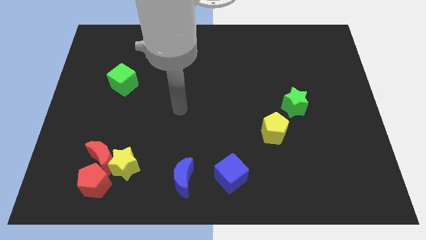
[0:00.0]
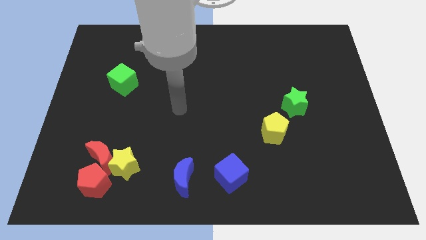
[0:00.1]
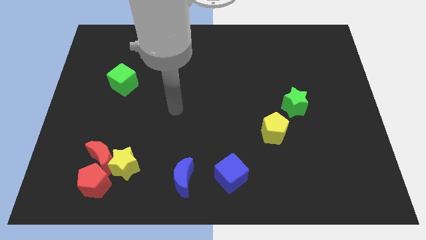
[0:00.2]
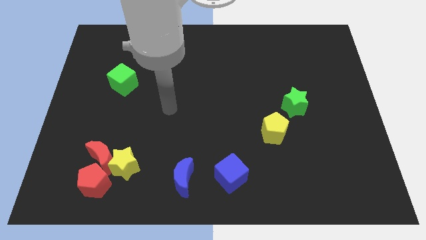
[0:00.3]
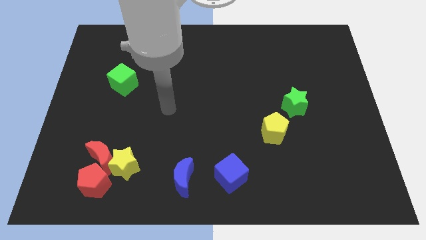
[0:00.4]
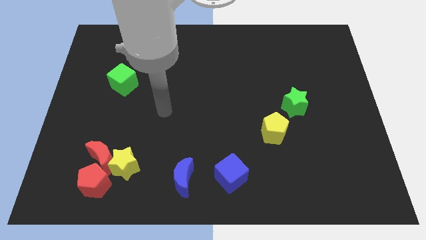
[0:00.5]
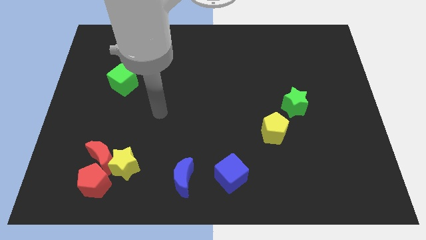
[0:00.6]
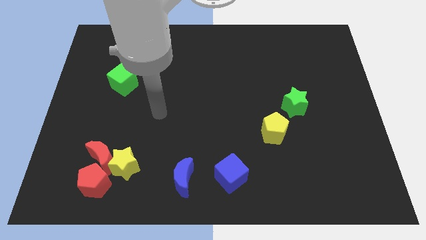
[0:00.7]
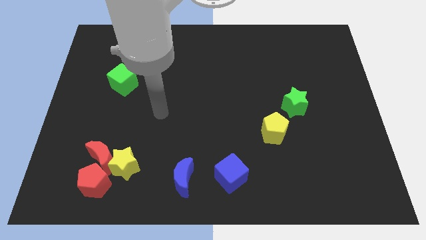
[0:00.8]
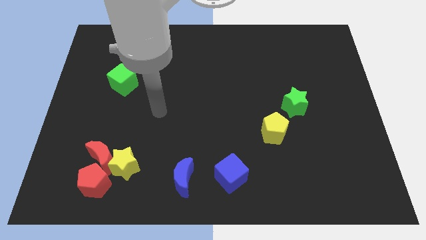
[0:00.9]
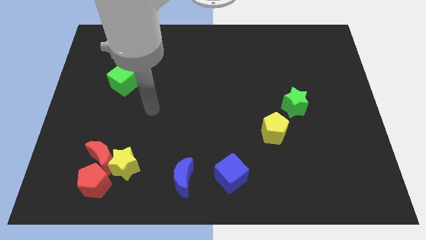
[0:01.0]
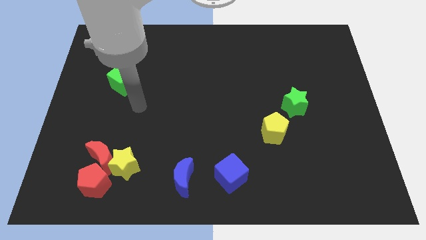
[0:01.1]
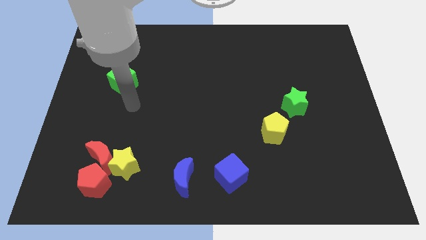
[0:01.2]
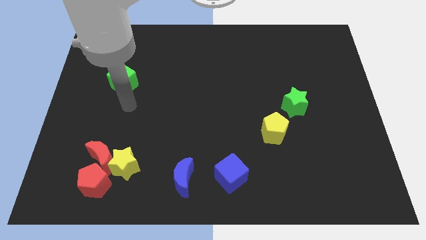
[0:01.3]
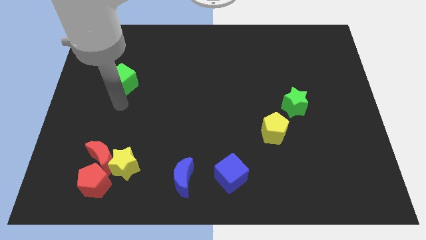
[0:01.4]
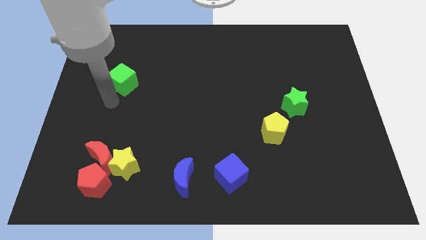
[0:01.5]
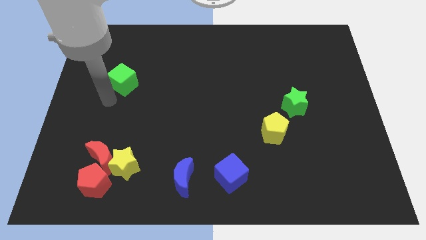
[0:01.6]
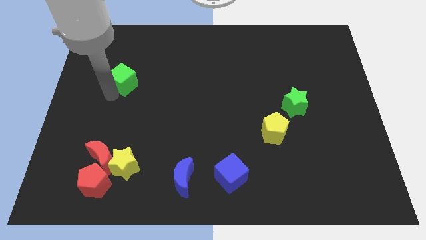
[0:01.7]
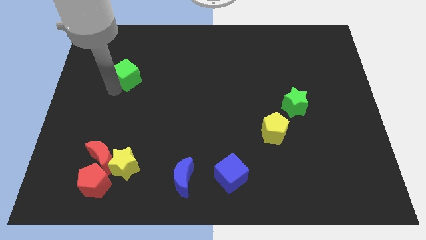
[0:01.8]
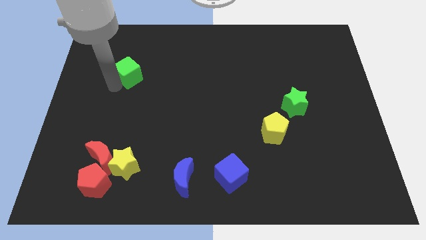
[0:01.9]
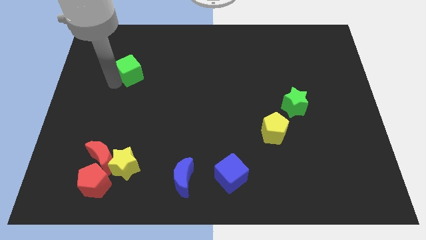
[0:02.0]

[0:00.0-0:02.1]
move green cube parallel to the yellow star

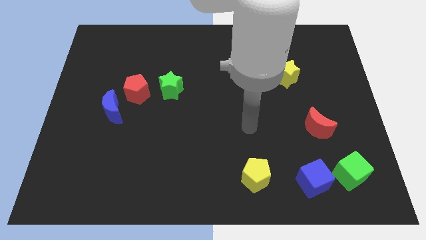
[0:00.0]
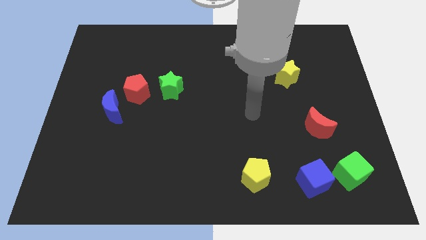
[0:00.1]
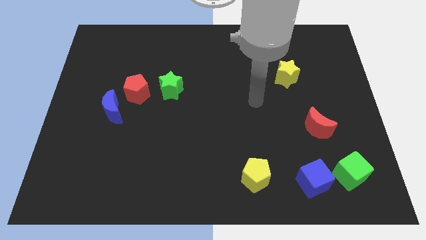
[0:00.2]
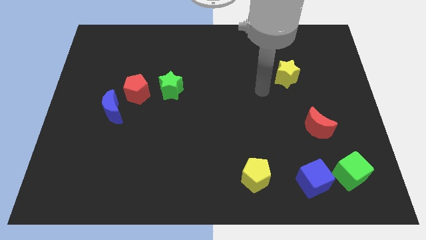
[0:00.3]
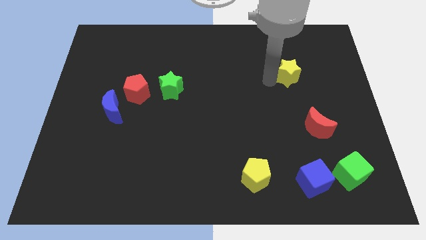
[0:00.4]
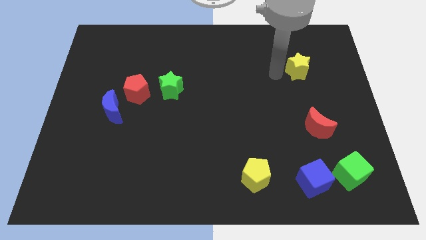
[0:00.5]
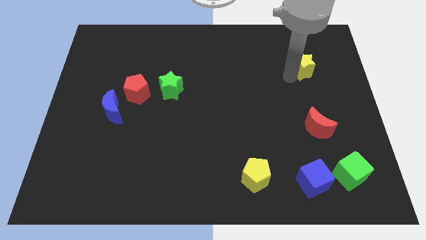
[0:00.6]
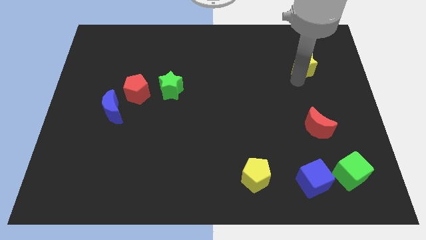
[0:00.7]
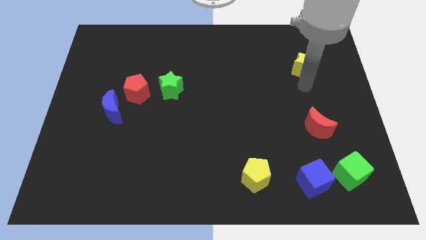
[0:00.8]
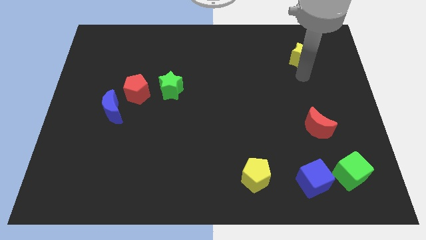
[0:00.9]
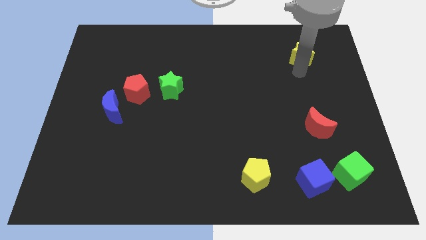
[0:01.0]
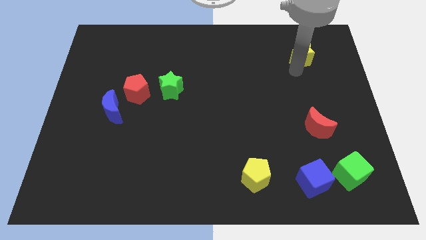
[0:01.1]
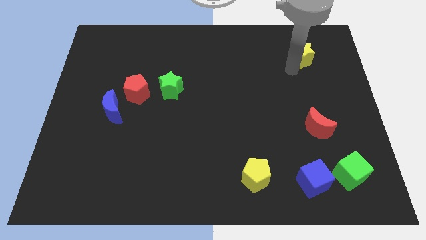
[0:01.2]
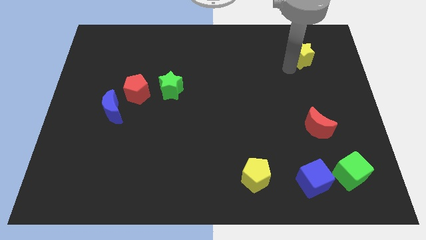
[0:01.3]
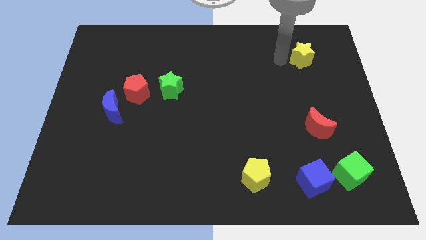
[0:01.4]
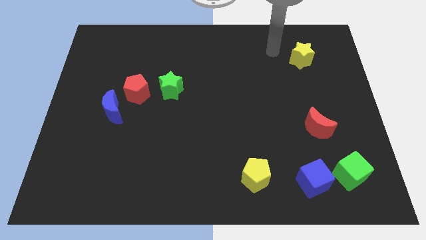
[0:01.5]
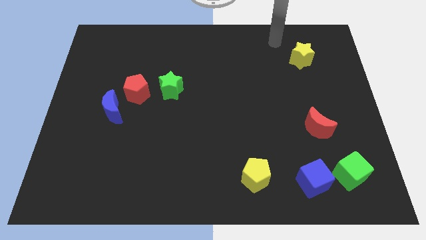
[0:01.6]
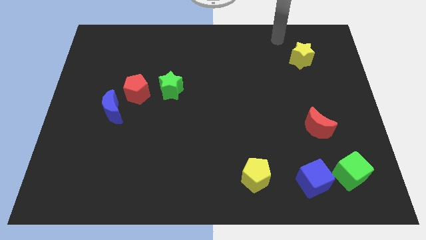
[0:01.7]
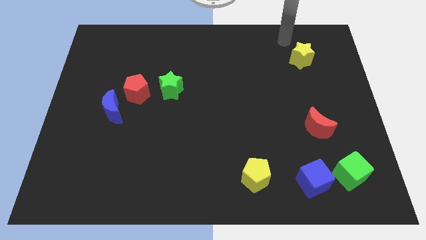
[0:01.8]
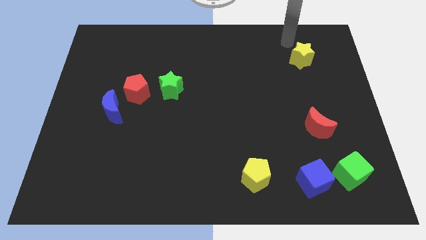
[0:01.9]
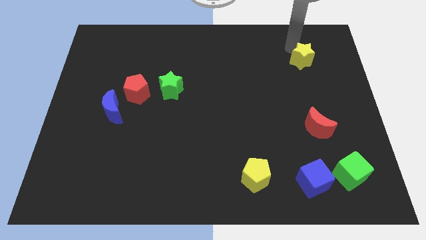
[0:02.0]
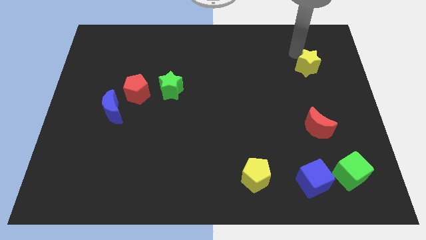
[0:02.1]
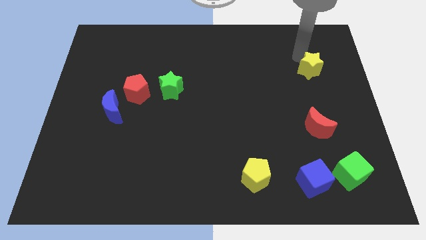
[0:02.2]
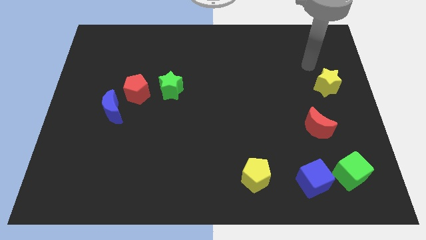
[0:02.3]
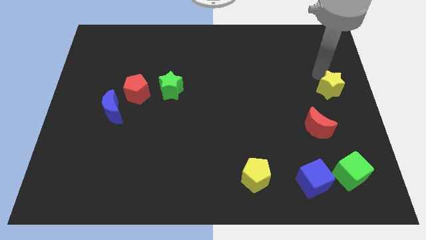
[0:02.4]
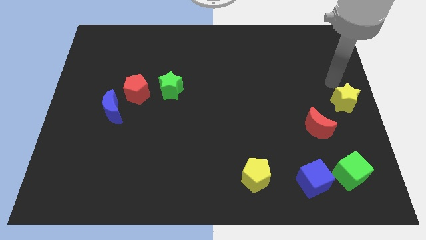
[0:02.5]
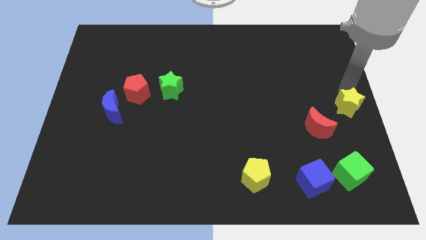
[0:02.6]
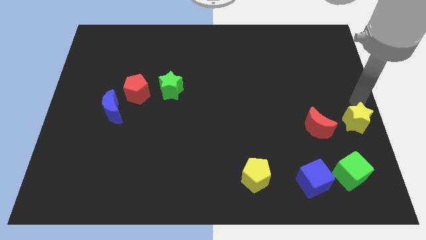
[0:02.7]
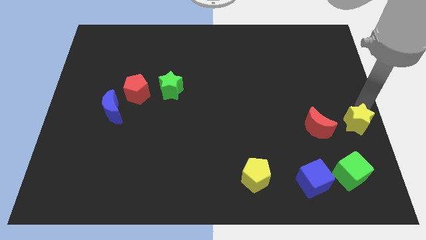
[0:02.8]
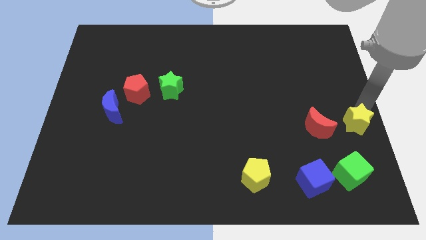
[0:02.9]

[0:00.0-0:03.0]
place the yellow star to the right of the red moon

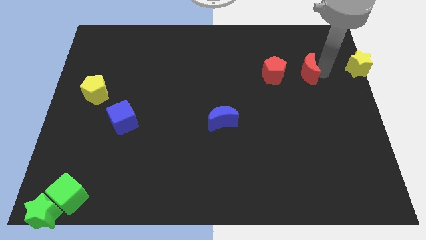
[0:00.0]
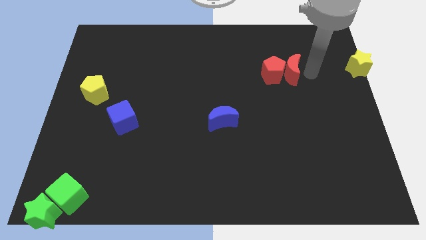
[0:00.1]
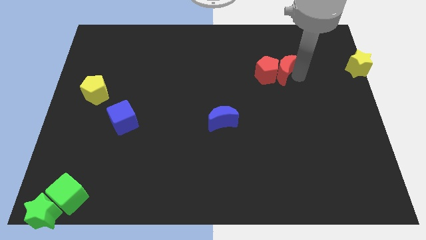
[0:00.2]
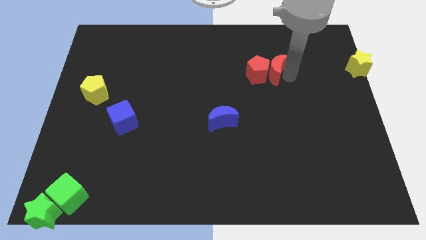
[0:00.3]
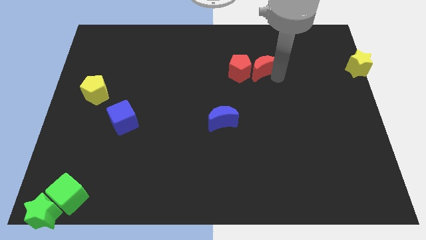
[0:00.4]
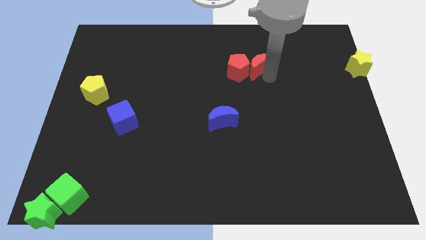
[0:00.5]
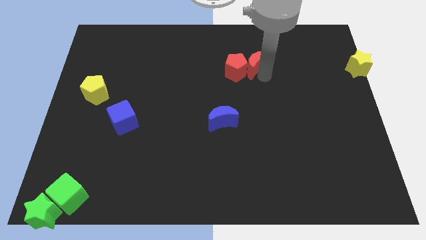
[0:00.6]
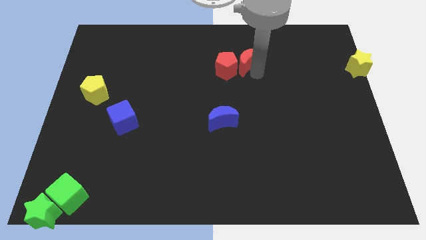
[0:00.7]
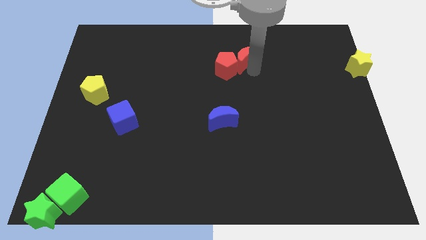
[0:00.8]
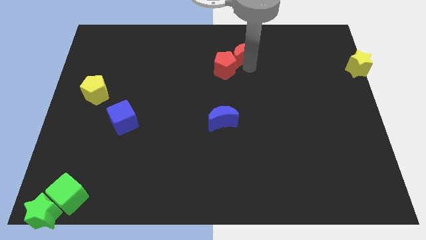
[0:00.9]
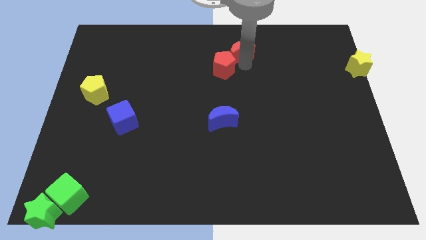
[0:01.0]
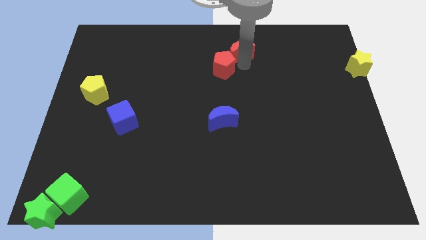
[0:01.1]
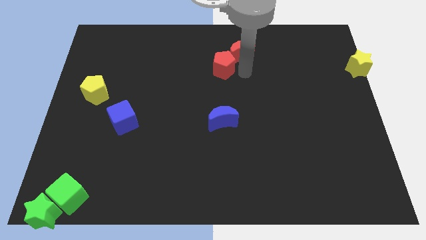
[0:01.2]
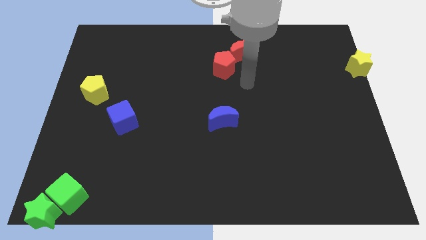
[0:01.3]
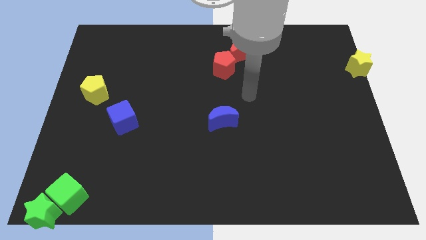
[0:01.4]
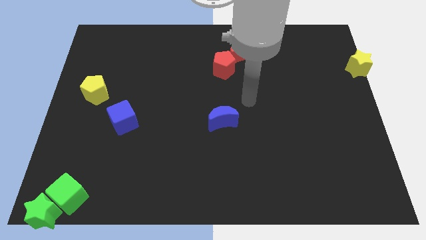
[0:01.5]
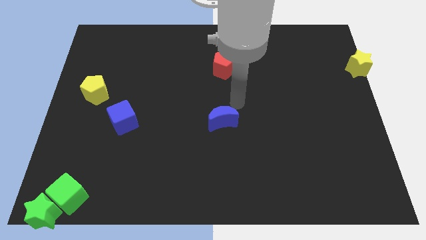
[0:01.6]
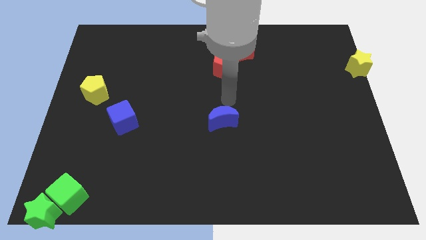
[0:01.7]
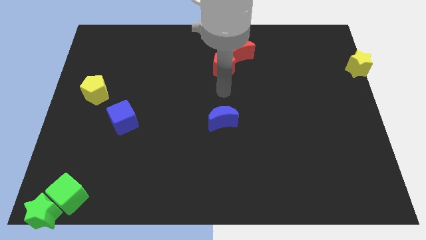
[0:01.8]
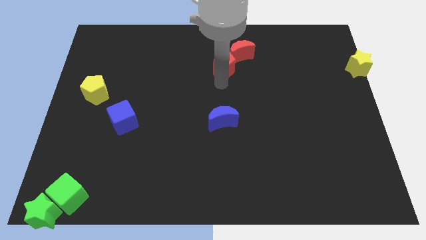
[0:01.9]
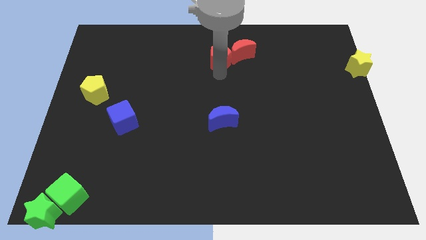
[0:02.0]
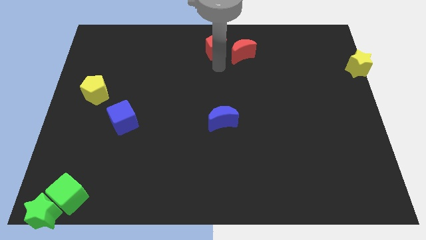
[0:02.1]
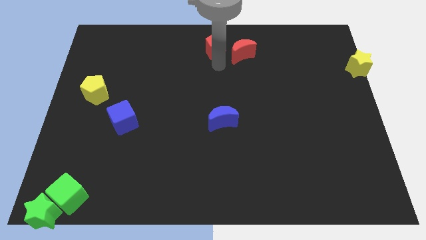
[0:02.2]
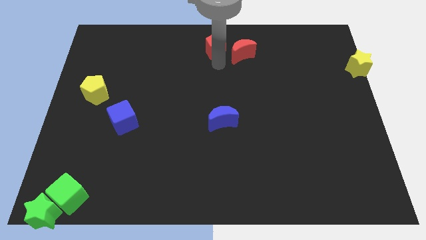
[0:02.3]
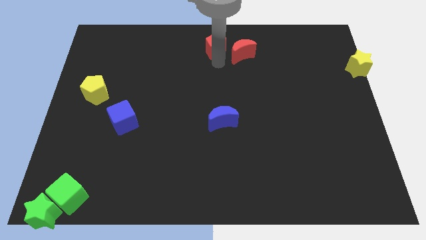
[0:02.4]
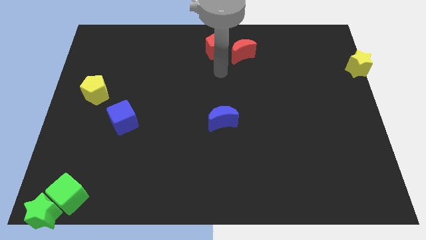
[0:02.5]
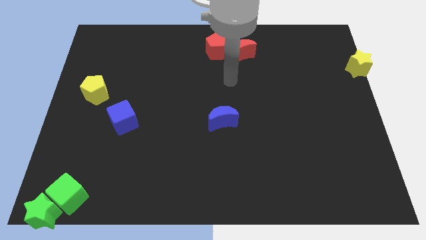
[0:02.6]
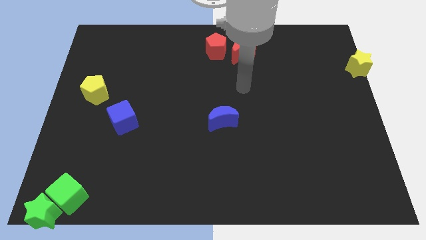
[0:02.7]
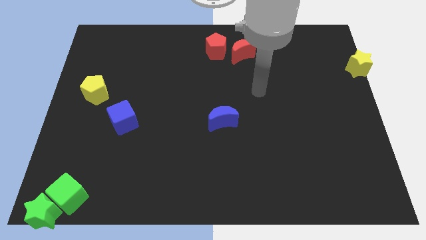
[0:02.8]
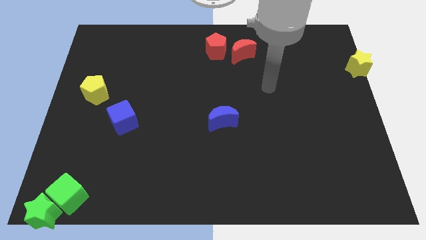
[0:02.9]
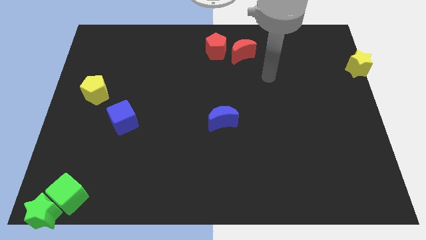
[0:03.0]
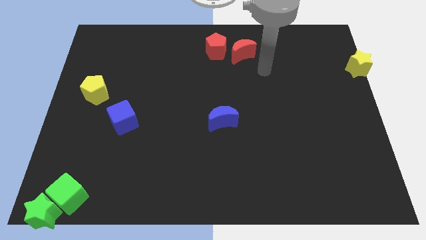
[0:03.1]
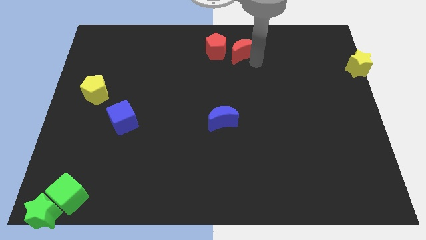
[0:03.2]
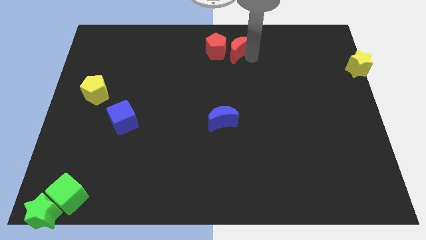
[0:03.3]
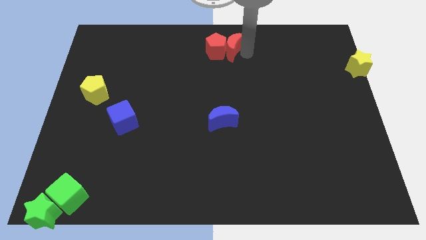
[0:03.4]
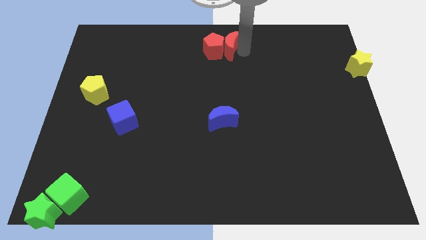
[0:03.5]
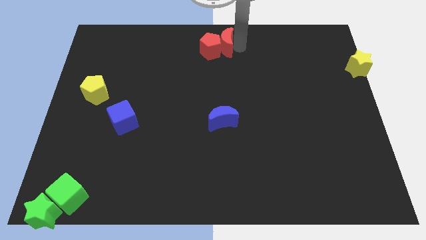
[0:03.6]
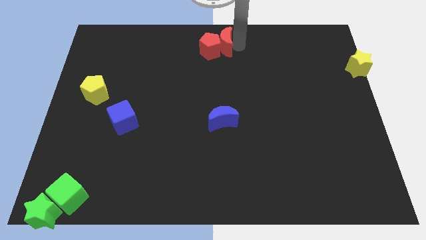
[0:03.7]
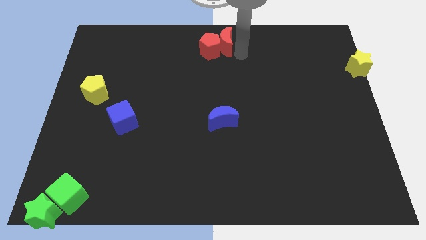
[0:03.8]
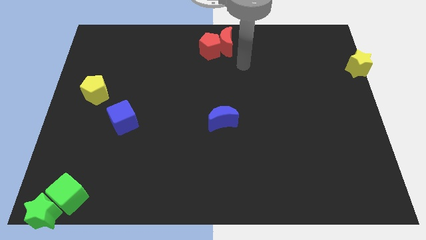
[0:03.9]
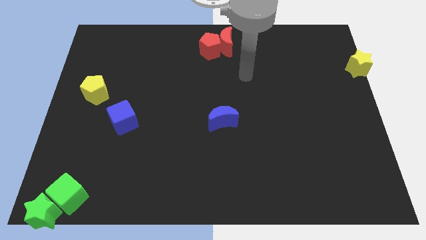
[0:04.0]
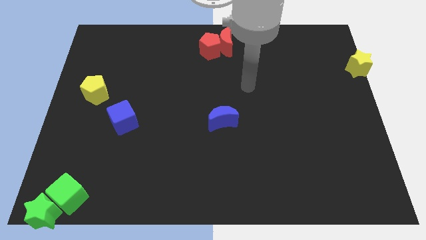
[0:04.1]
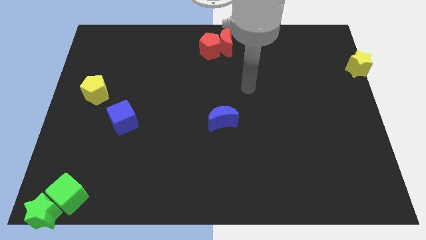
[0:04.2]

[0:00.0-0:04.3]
place red blocks at the top center of the board
